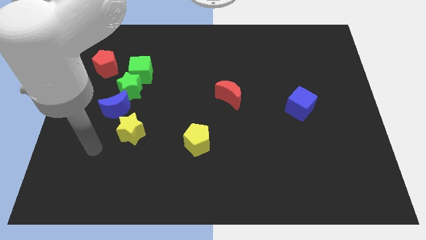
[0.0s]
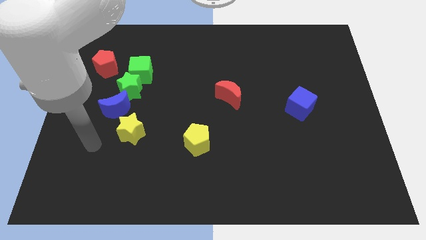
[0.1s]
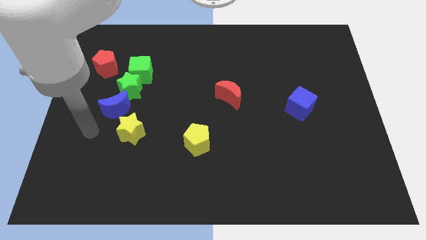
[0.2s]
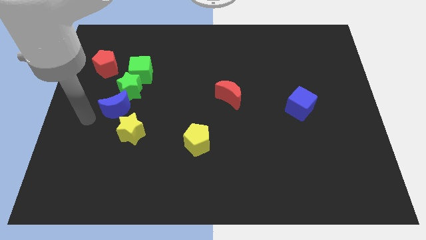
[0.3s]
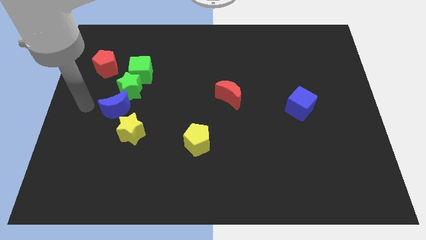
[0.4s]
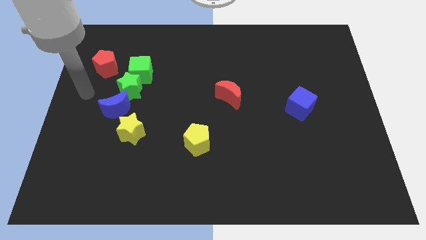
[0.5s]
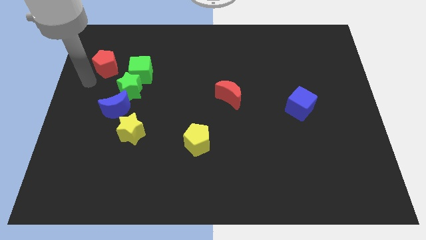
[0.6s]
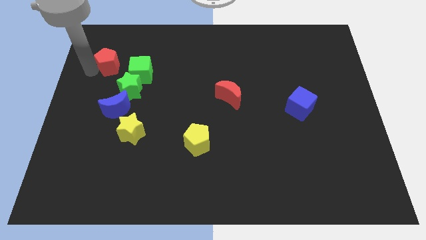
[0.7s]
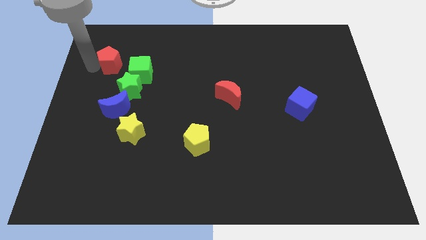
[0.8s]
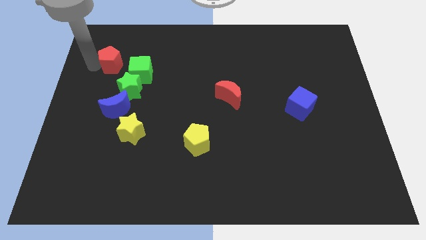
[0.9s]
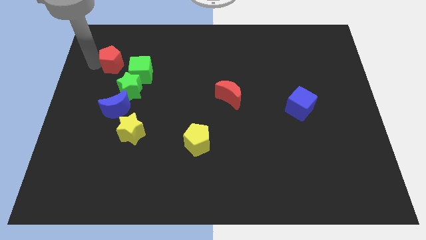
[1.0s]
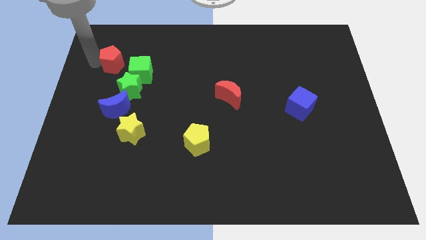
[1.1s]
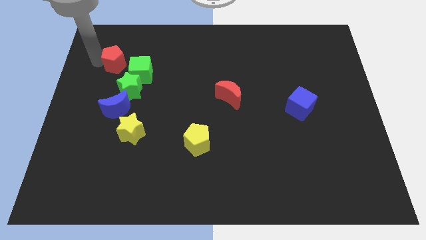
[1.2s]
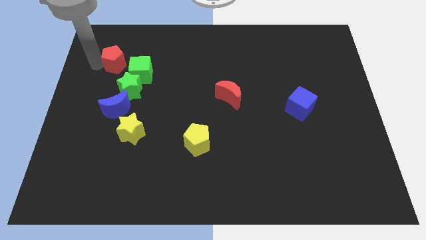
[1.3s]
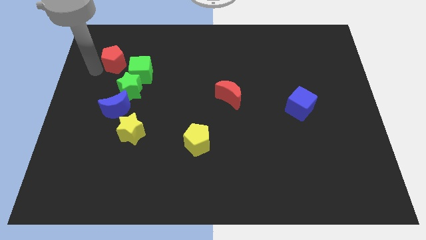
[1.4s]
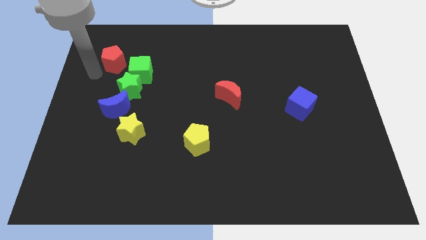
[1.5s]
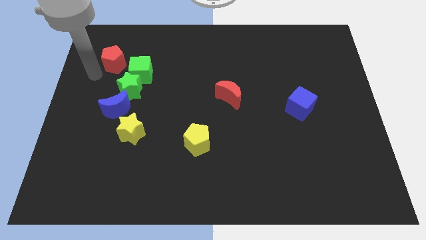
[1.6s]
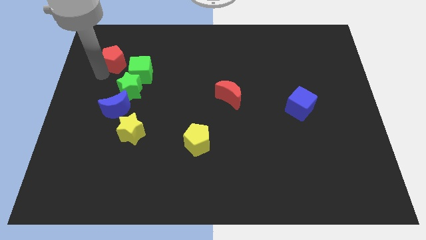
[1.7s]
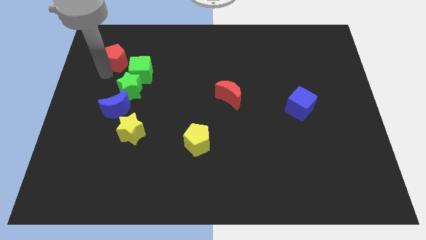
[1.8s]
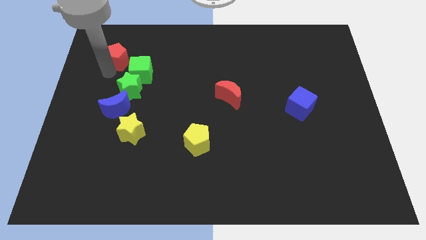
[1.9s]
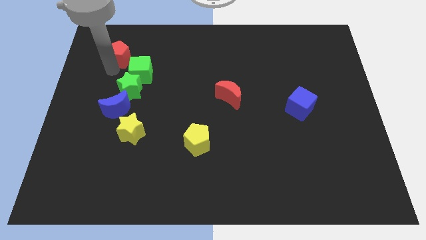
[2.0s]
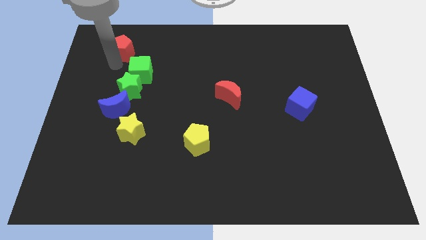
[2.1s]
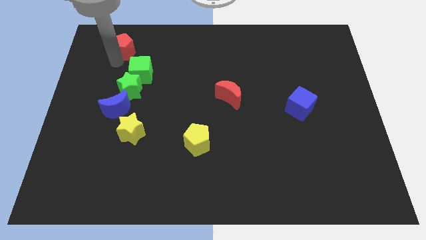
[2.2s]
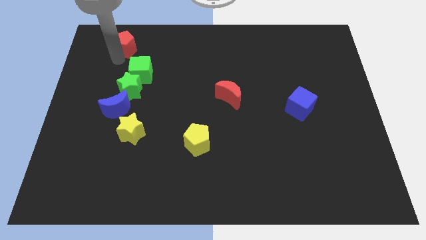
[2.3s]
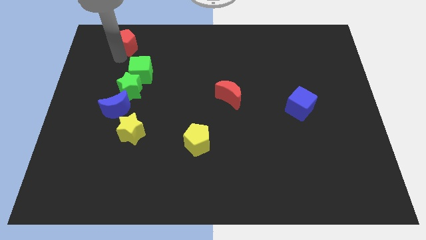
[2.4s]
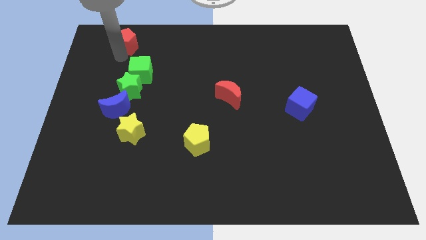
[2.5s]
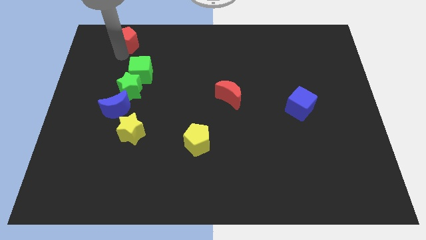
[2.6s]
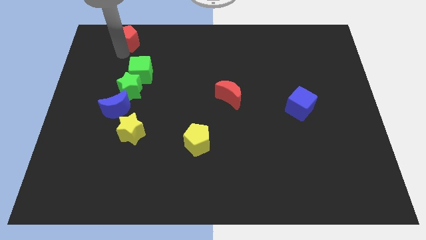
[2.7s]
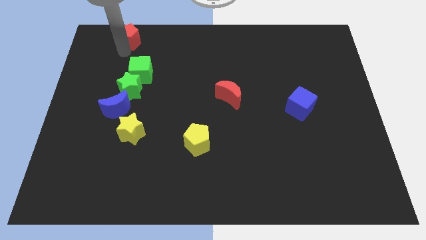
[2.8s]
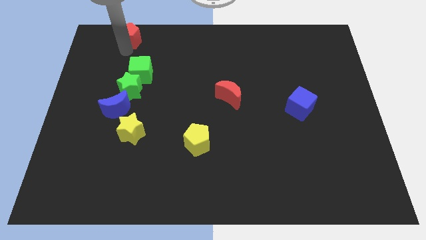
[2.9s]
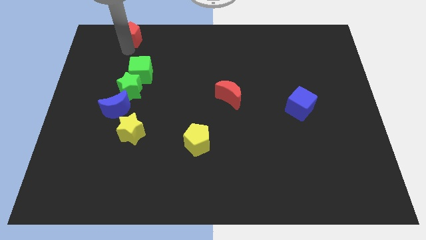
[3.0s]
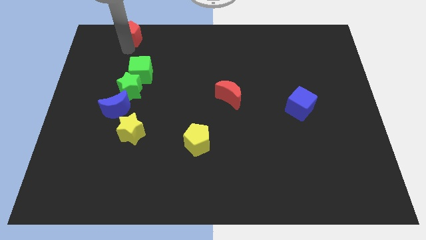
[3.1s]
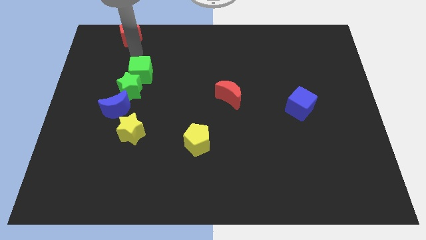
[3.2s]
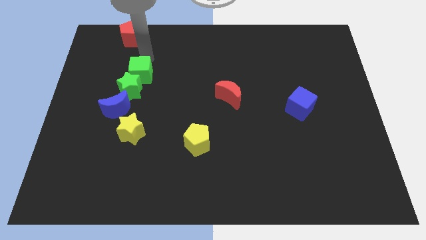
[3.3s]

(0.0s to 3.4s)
move red pentagon to the top of the board

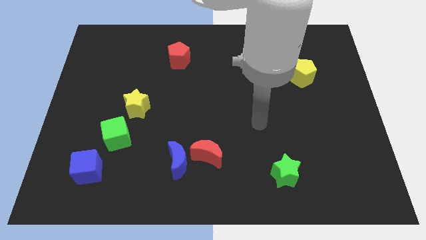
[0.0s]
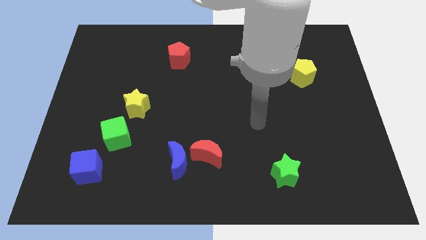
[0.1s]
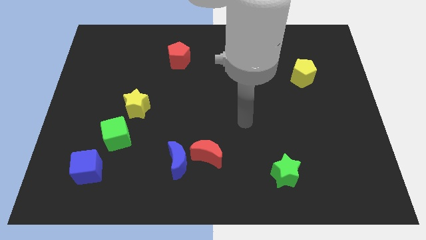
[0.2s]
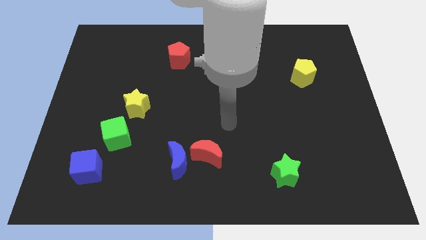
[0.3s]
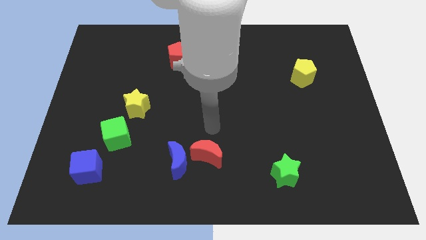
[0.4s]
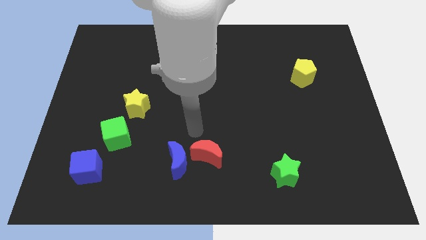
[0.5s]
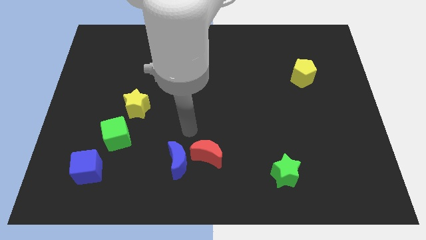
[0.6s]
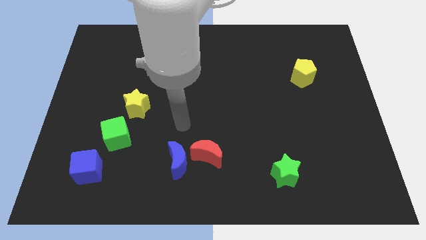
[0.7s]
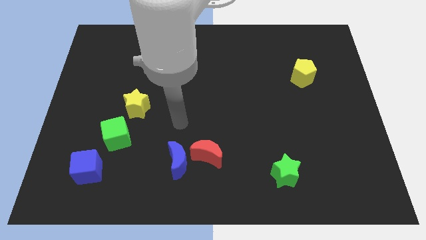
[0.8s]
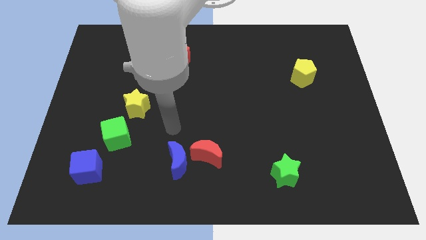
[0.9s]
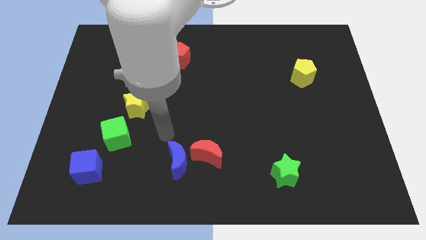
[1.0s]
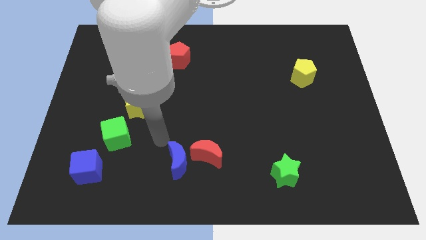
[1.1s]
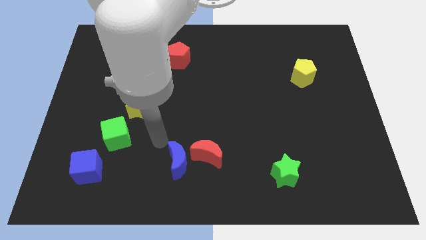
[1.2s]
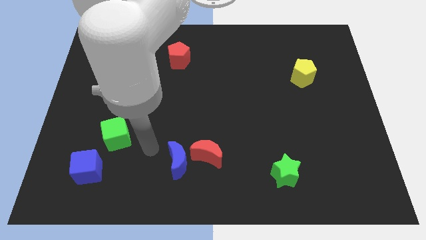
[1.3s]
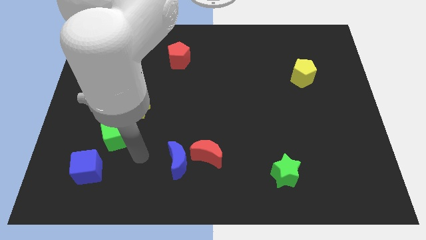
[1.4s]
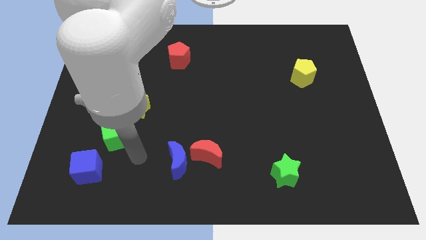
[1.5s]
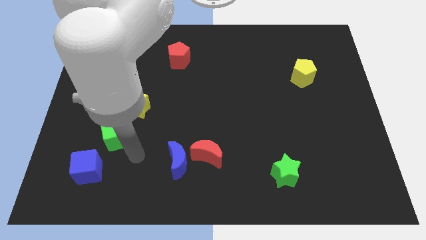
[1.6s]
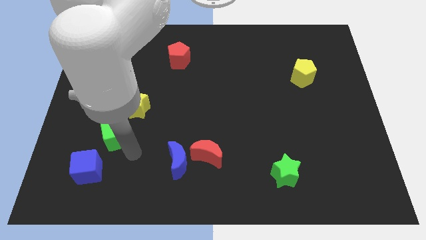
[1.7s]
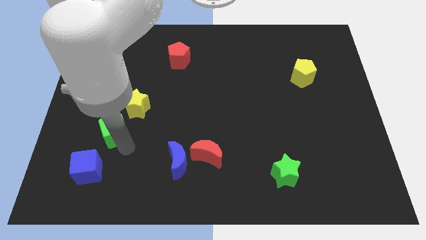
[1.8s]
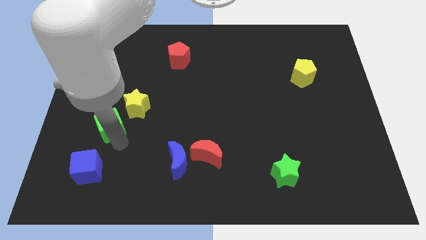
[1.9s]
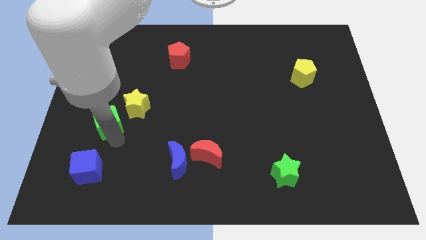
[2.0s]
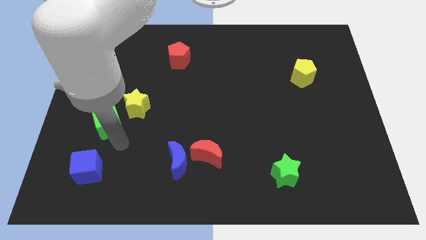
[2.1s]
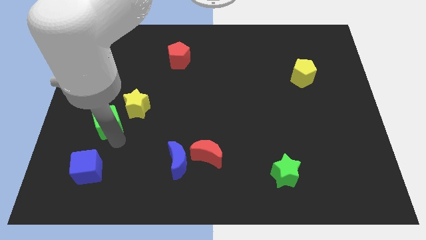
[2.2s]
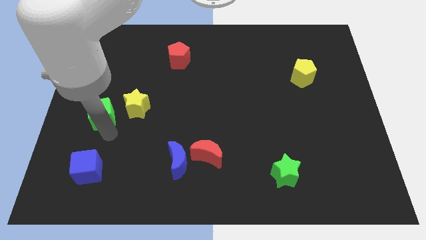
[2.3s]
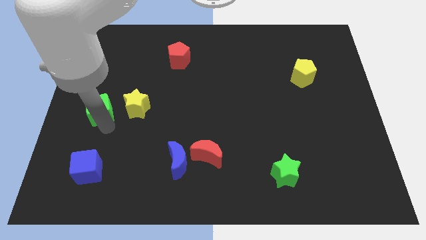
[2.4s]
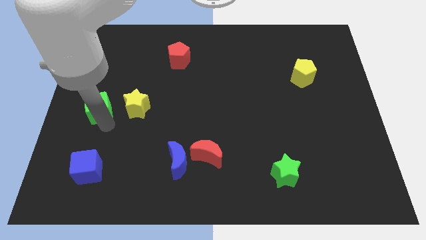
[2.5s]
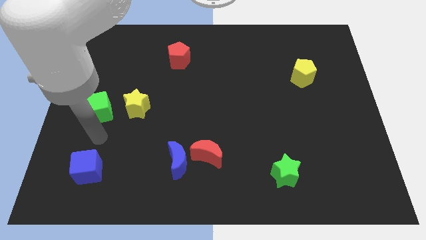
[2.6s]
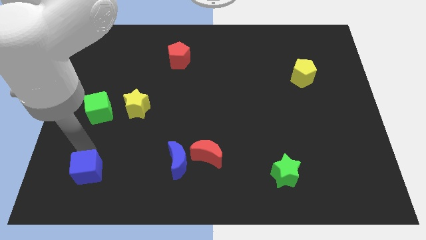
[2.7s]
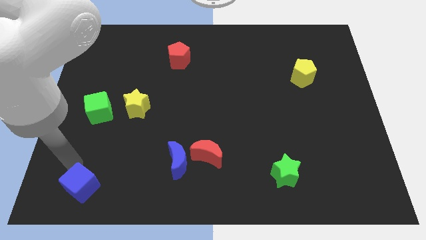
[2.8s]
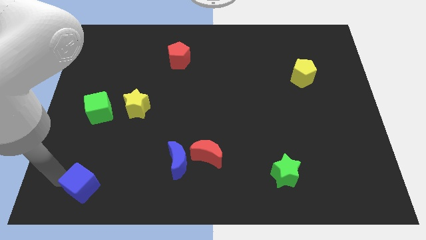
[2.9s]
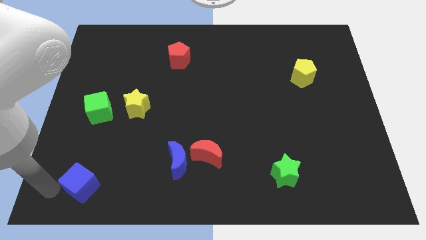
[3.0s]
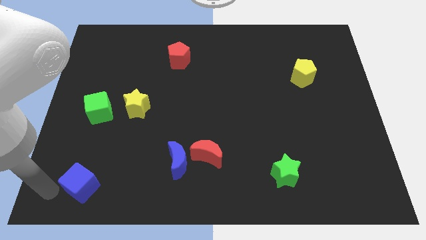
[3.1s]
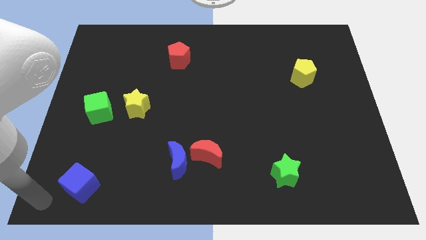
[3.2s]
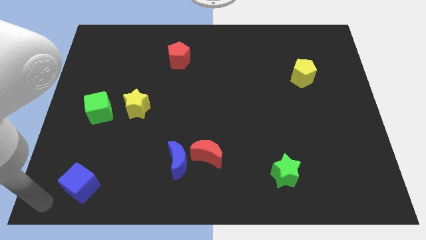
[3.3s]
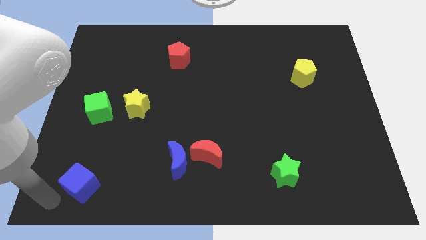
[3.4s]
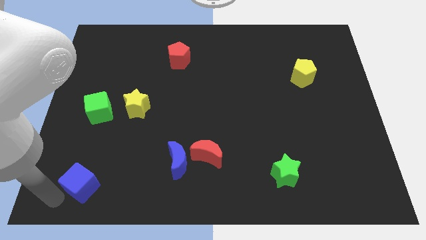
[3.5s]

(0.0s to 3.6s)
move the green cube to left of yellow star

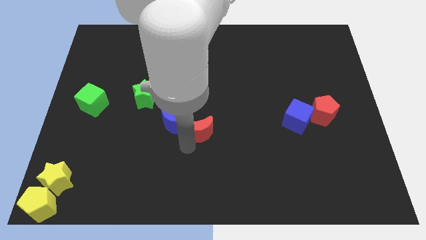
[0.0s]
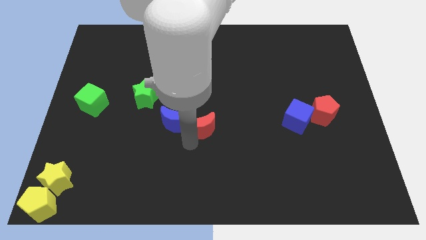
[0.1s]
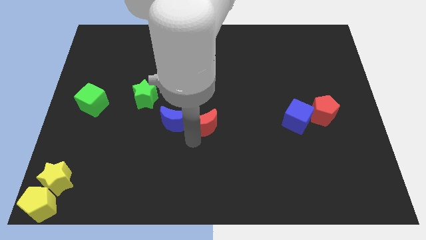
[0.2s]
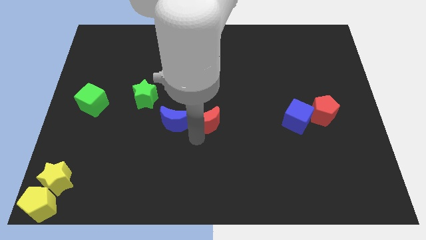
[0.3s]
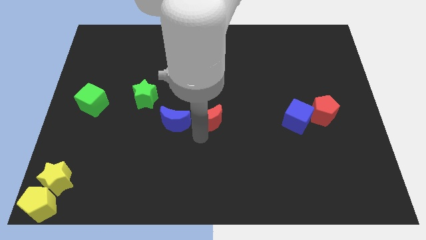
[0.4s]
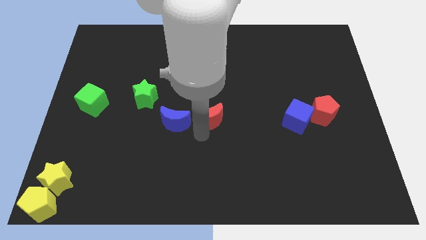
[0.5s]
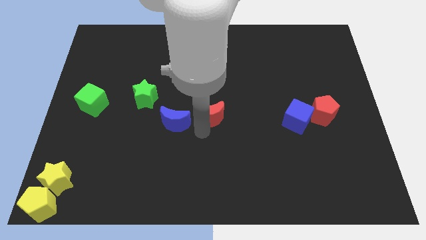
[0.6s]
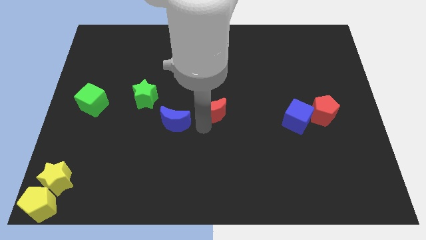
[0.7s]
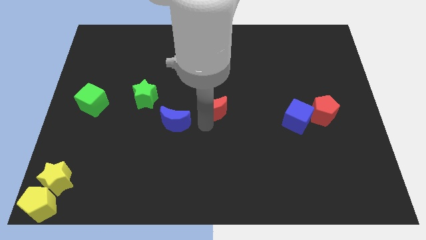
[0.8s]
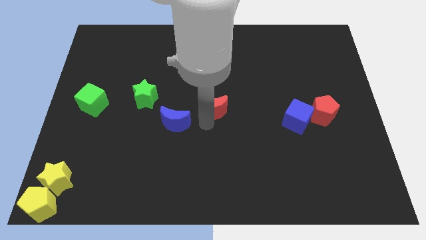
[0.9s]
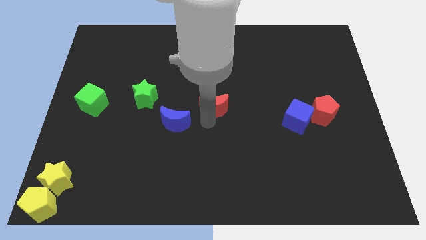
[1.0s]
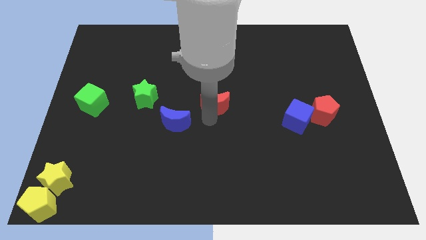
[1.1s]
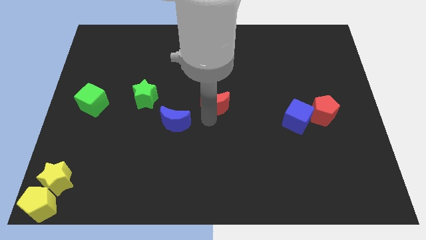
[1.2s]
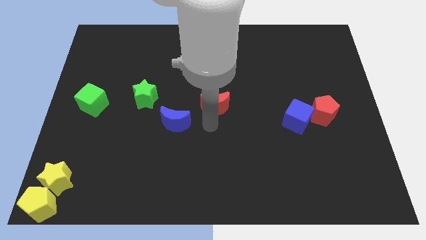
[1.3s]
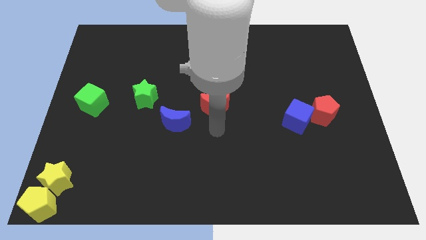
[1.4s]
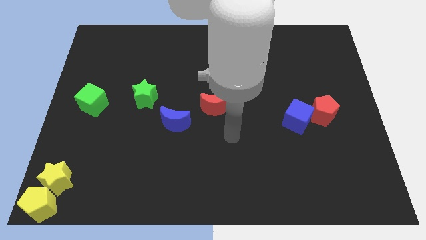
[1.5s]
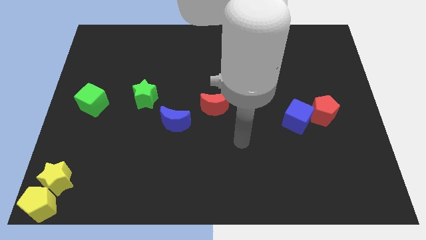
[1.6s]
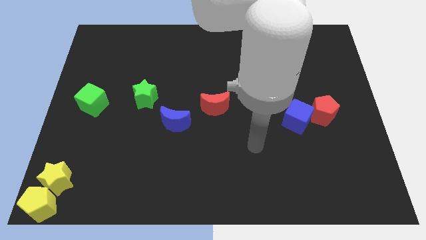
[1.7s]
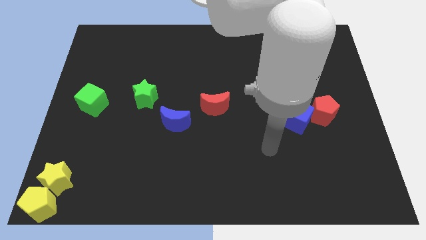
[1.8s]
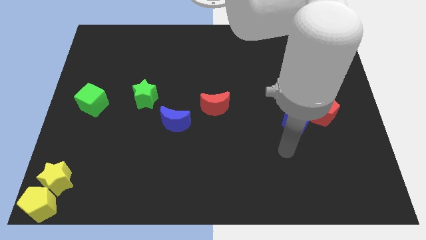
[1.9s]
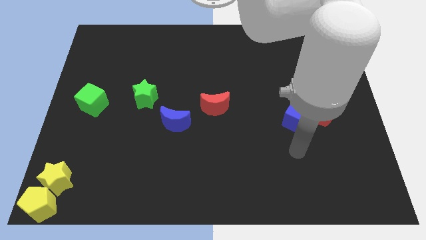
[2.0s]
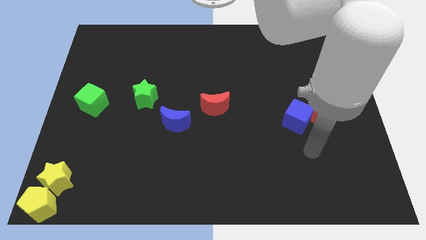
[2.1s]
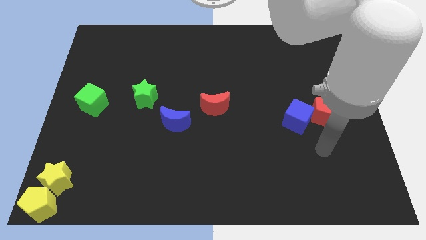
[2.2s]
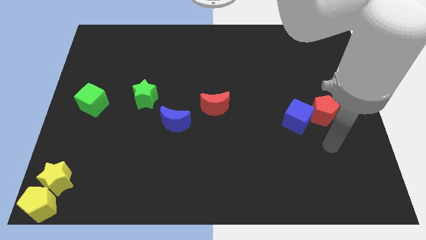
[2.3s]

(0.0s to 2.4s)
separate the red moon from the blue moon
